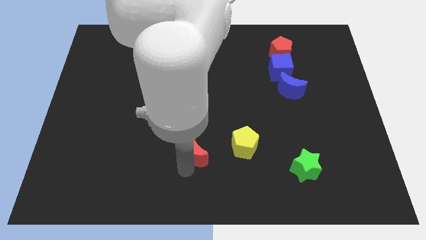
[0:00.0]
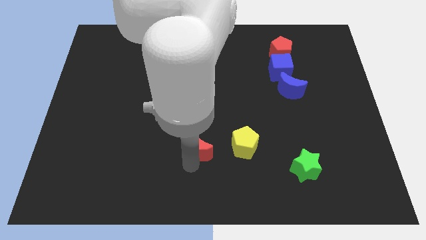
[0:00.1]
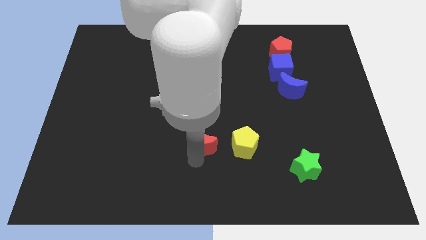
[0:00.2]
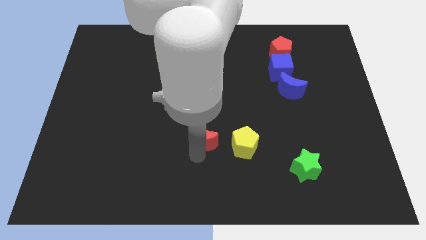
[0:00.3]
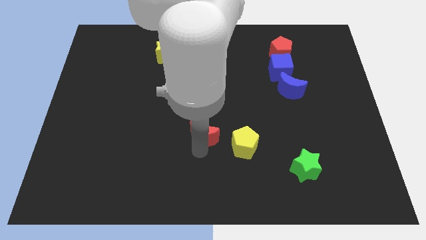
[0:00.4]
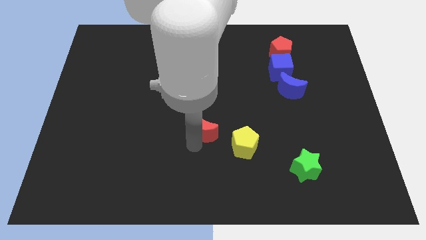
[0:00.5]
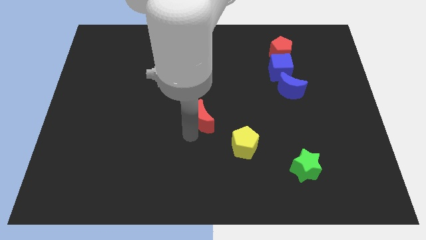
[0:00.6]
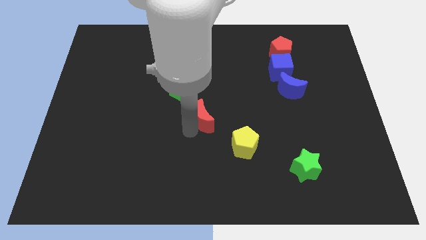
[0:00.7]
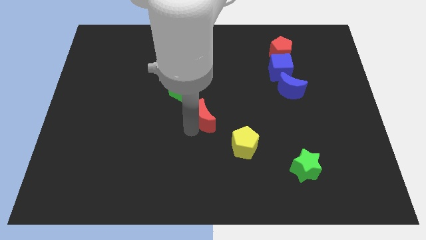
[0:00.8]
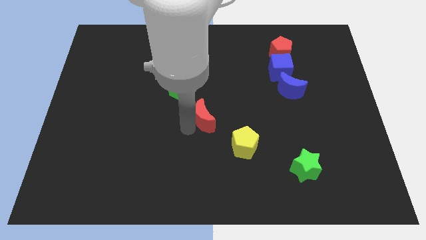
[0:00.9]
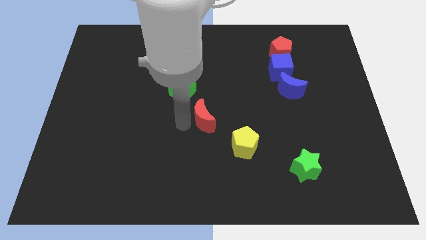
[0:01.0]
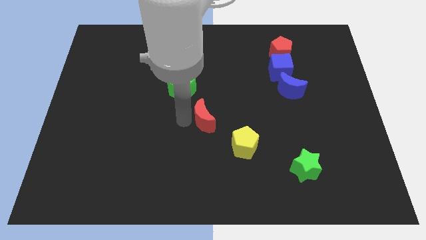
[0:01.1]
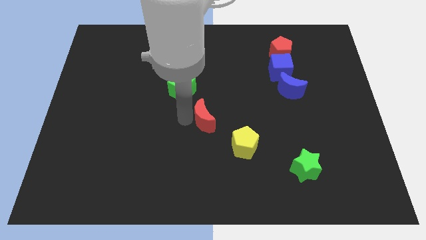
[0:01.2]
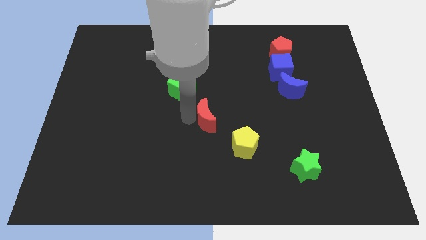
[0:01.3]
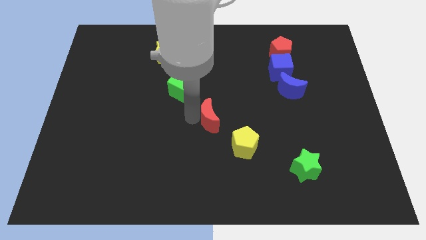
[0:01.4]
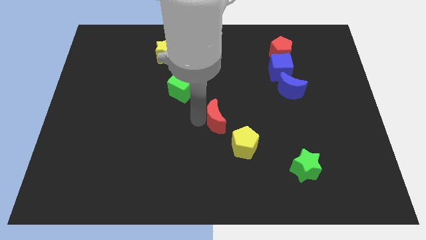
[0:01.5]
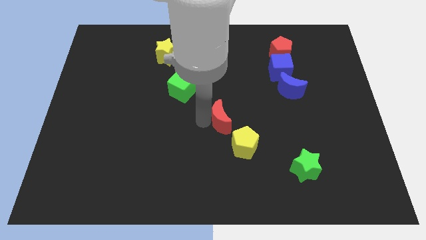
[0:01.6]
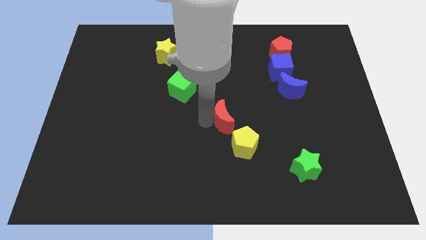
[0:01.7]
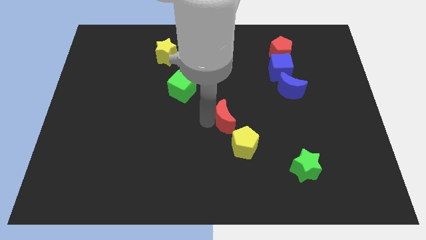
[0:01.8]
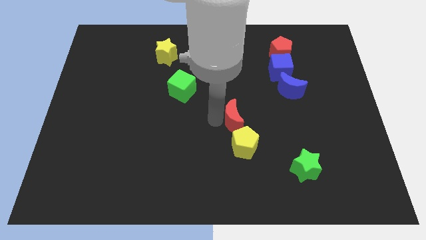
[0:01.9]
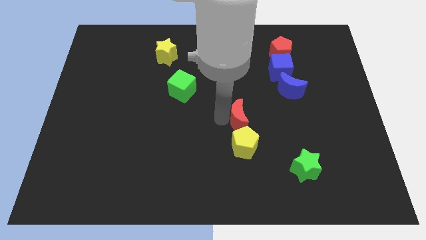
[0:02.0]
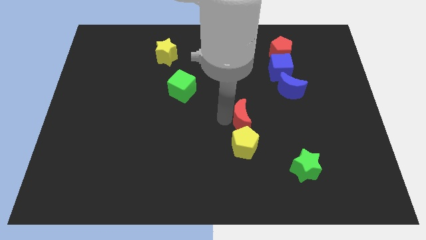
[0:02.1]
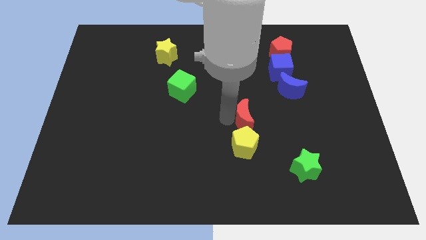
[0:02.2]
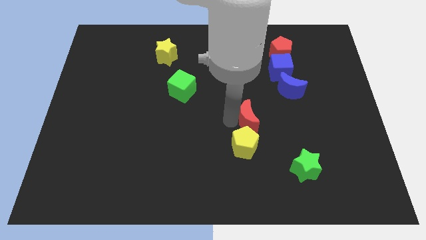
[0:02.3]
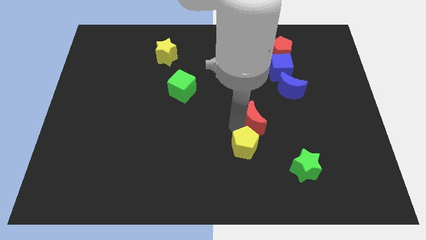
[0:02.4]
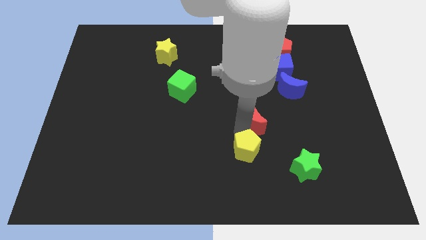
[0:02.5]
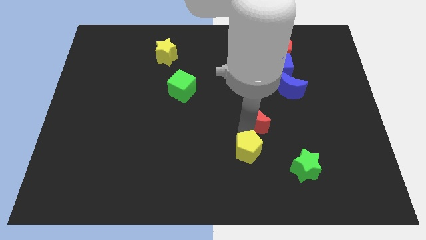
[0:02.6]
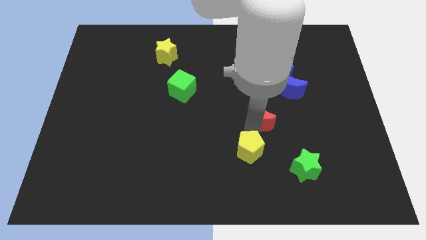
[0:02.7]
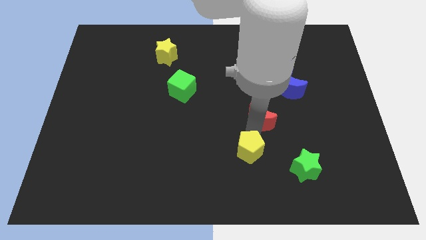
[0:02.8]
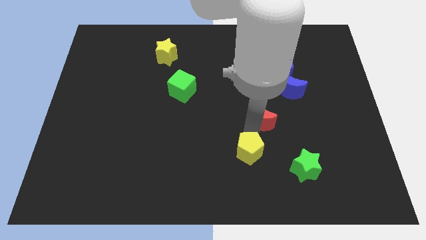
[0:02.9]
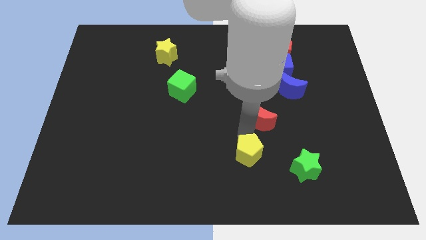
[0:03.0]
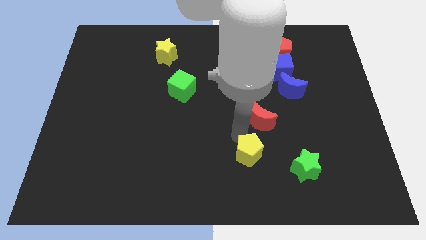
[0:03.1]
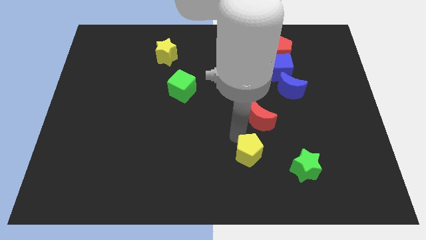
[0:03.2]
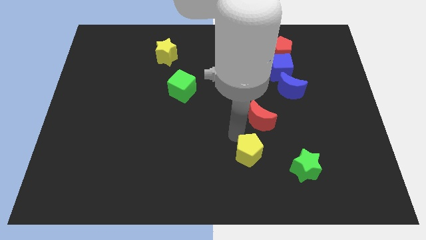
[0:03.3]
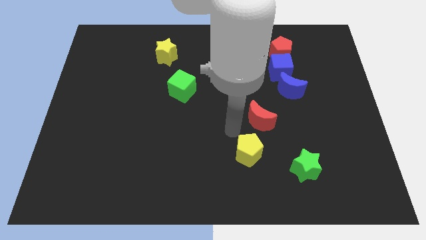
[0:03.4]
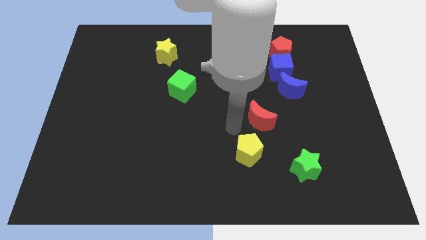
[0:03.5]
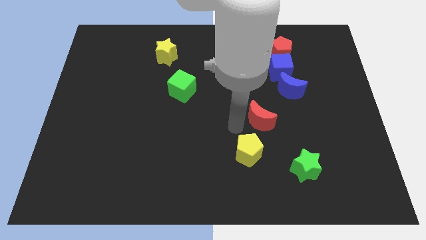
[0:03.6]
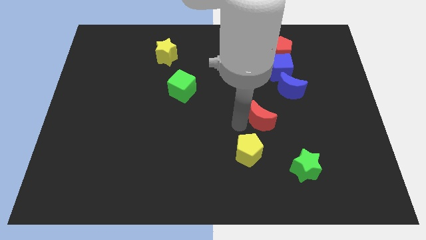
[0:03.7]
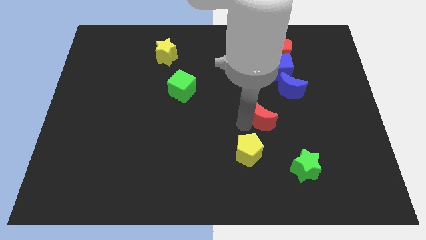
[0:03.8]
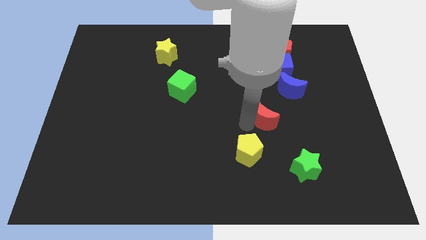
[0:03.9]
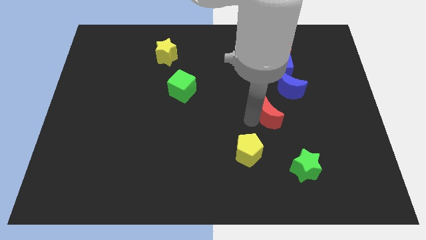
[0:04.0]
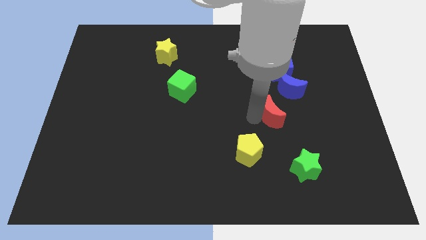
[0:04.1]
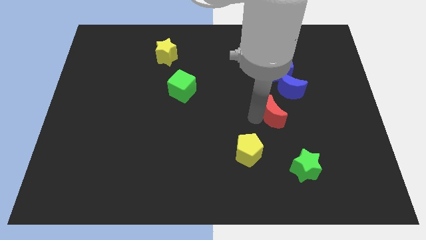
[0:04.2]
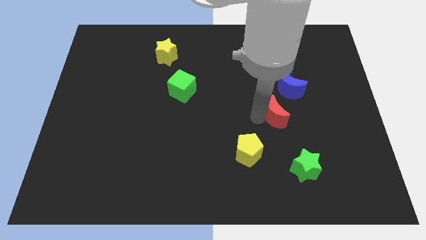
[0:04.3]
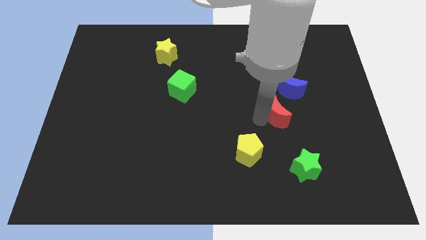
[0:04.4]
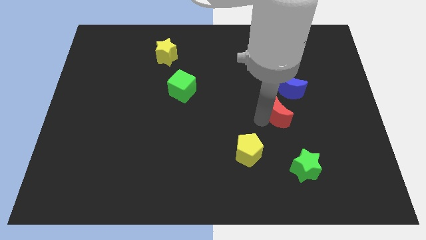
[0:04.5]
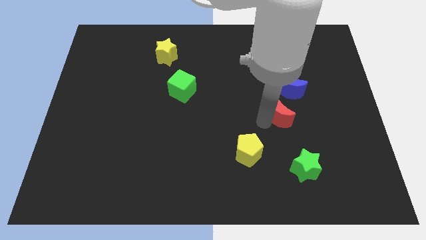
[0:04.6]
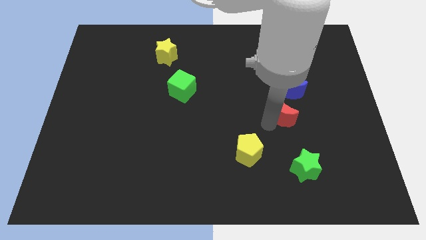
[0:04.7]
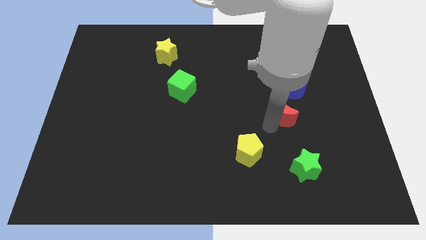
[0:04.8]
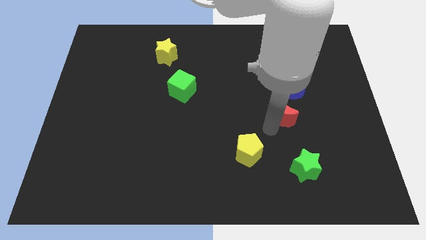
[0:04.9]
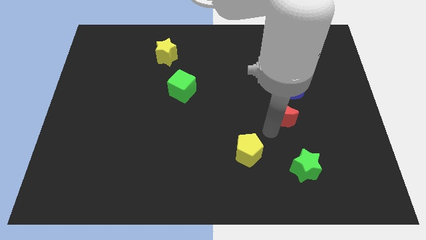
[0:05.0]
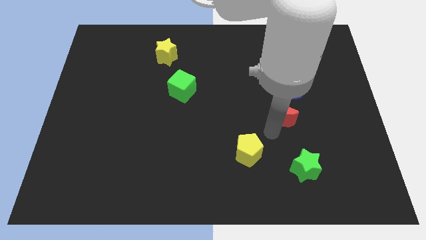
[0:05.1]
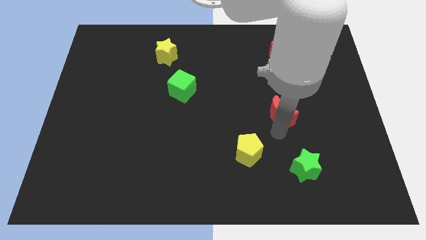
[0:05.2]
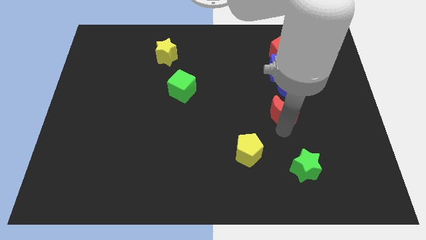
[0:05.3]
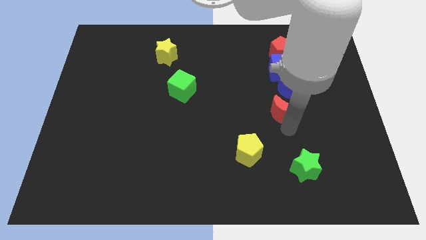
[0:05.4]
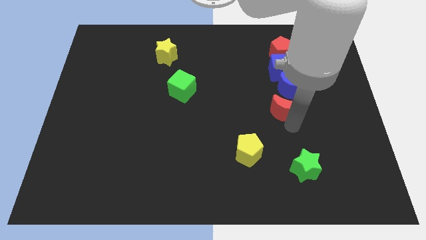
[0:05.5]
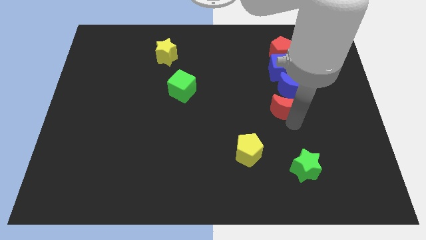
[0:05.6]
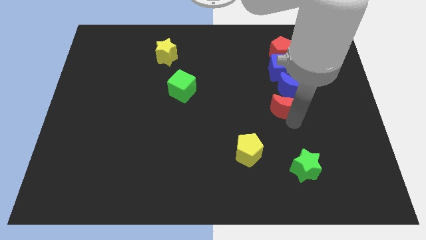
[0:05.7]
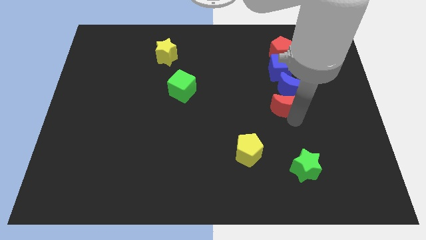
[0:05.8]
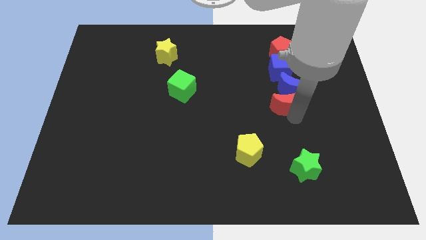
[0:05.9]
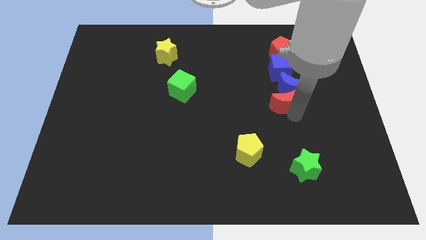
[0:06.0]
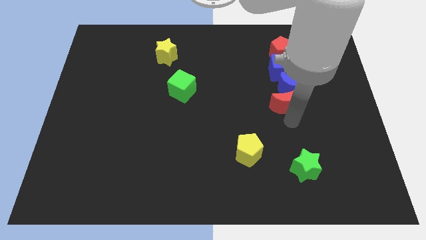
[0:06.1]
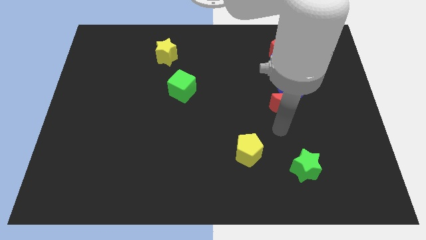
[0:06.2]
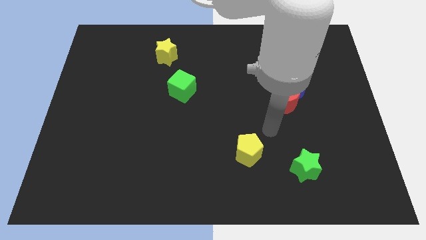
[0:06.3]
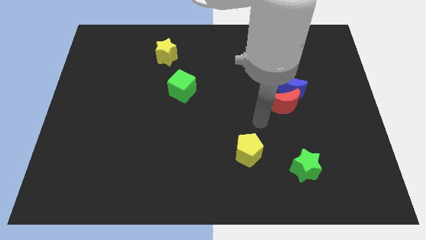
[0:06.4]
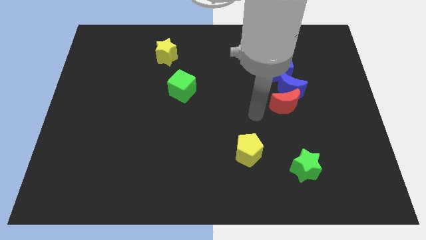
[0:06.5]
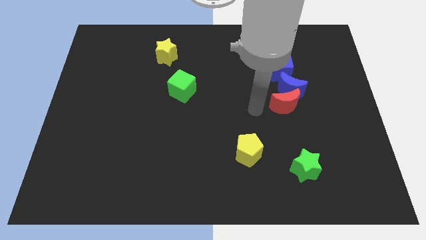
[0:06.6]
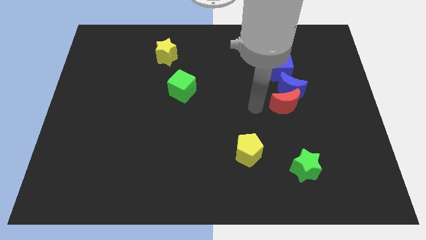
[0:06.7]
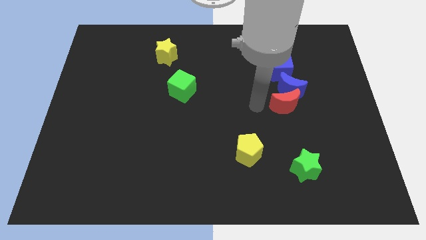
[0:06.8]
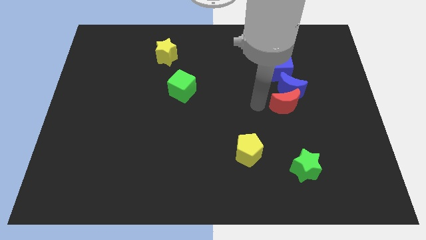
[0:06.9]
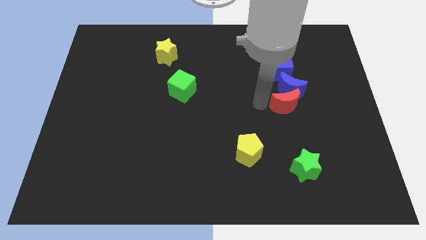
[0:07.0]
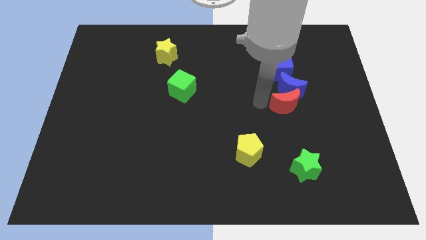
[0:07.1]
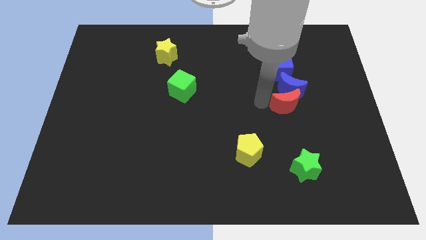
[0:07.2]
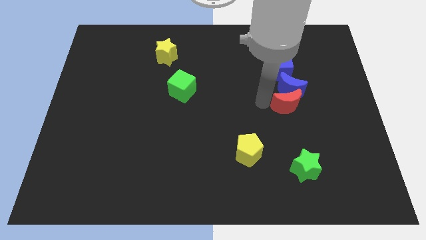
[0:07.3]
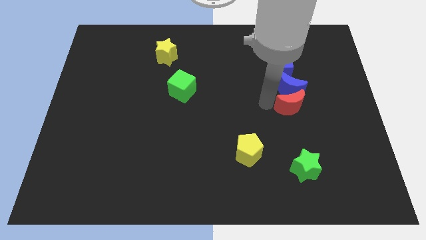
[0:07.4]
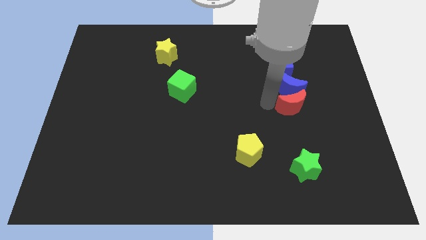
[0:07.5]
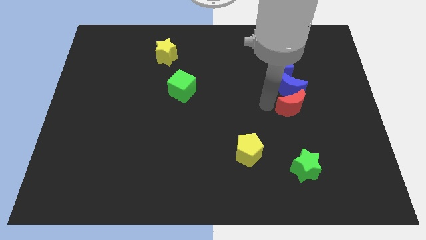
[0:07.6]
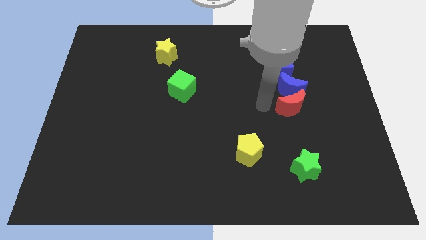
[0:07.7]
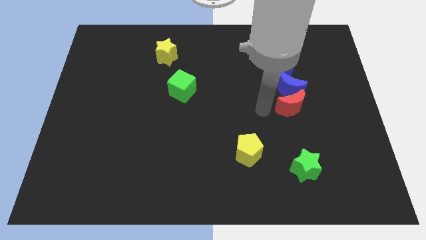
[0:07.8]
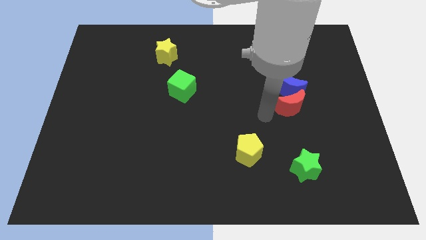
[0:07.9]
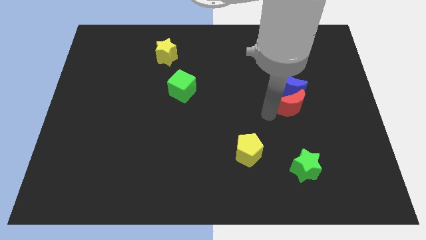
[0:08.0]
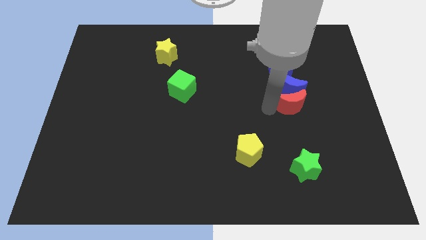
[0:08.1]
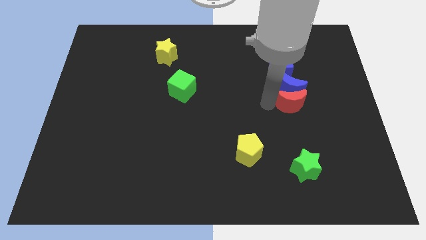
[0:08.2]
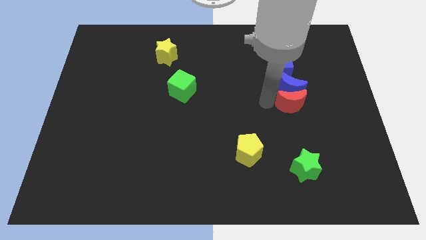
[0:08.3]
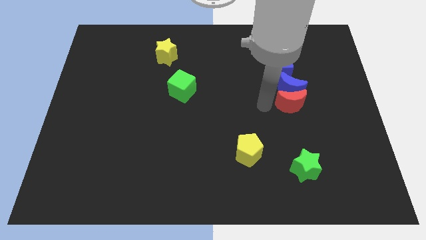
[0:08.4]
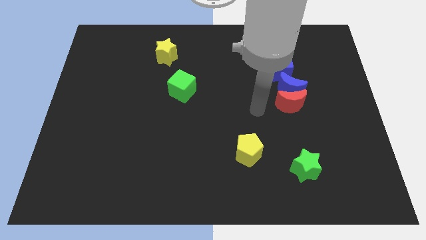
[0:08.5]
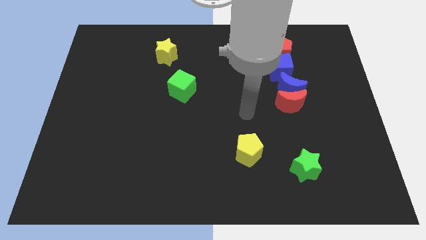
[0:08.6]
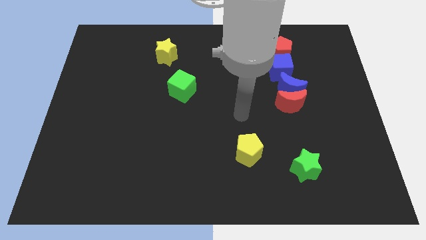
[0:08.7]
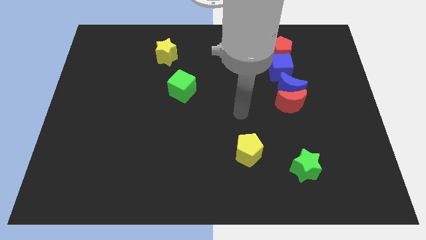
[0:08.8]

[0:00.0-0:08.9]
place the red moon vertically below the blue moon

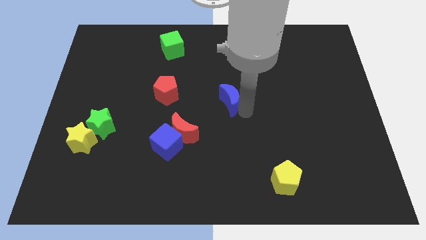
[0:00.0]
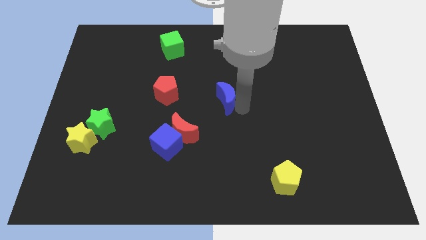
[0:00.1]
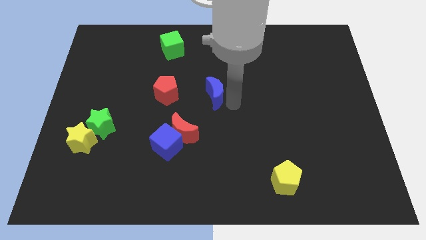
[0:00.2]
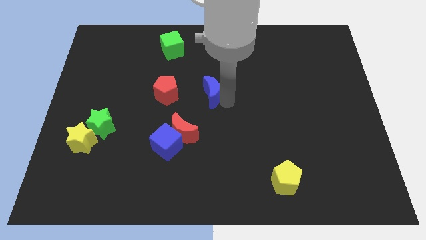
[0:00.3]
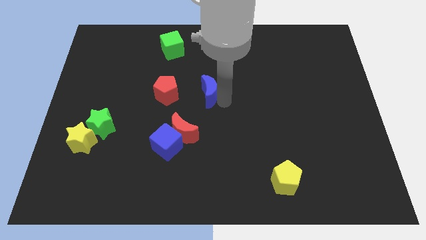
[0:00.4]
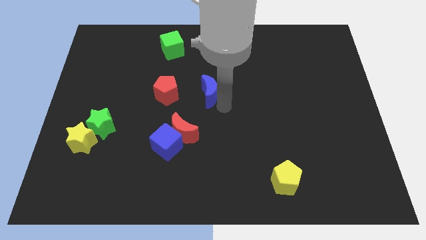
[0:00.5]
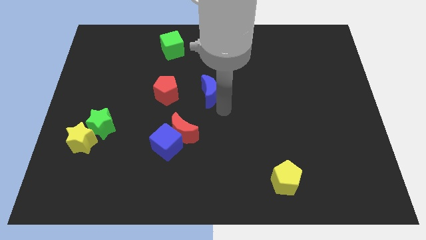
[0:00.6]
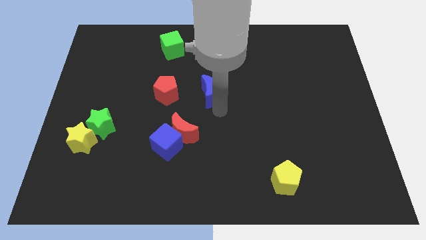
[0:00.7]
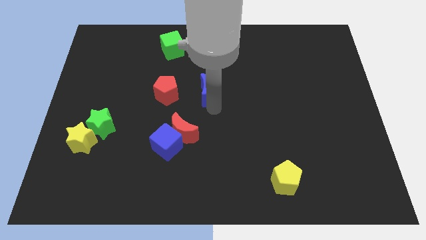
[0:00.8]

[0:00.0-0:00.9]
place the blue moon parallel to red pentagon
